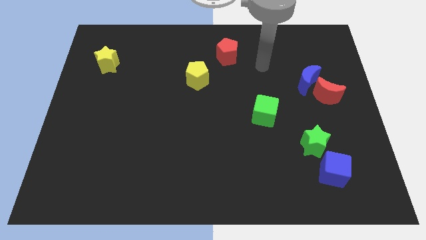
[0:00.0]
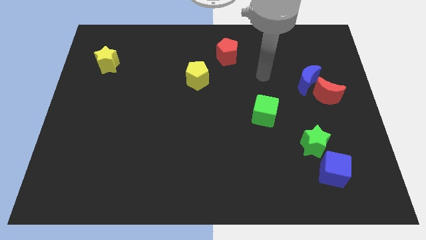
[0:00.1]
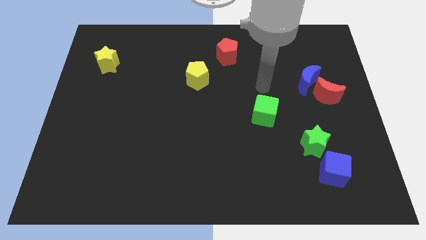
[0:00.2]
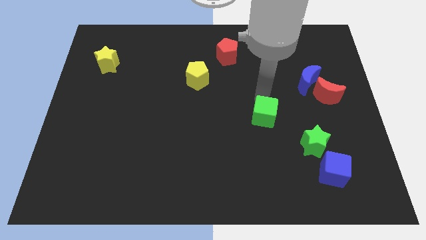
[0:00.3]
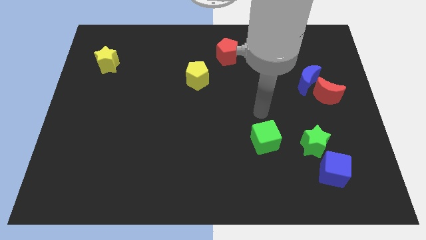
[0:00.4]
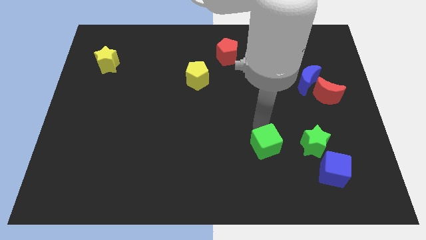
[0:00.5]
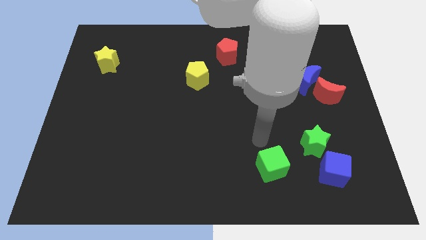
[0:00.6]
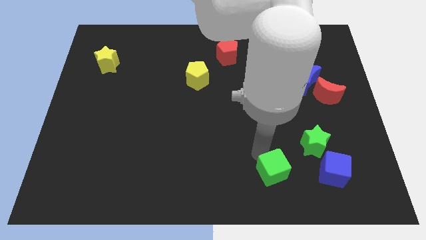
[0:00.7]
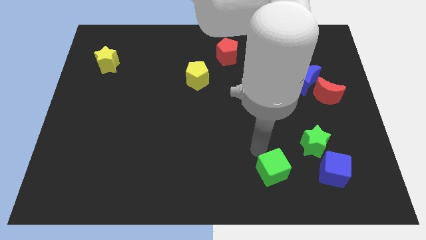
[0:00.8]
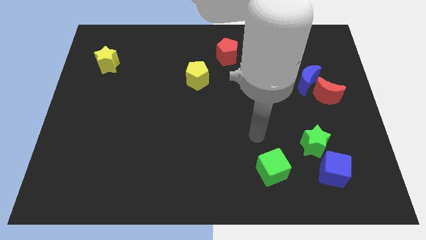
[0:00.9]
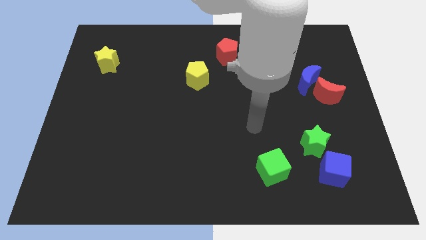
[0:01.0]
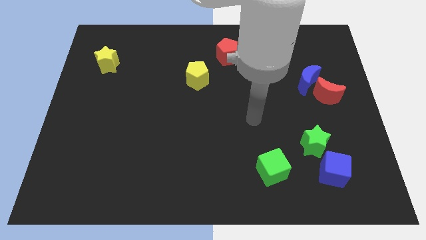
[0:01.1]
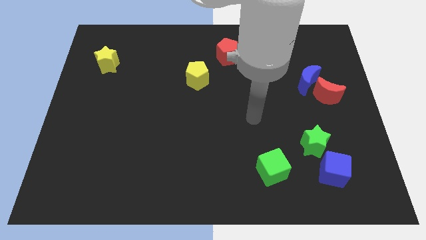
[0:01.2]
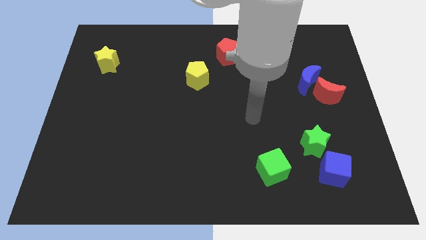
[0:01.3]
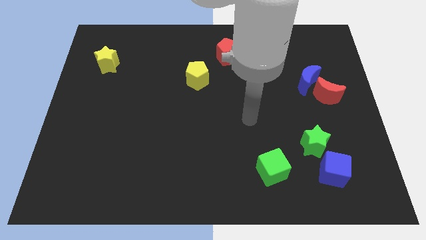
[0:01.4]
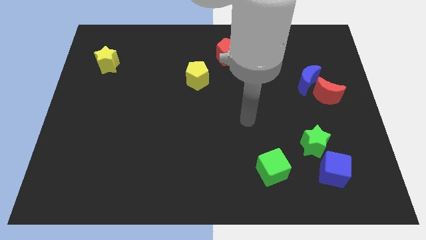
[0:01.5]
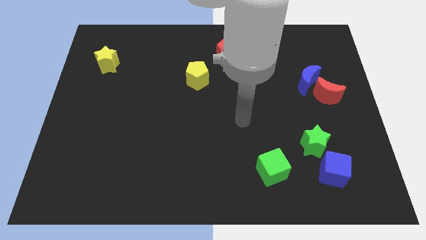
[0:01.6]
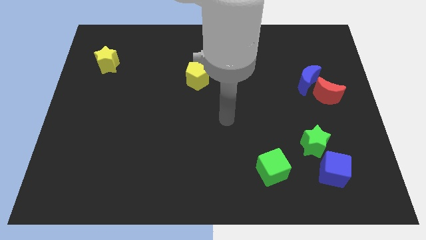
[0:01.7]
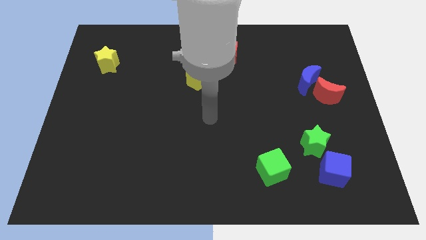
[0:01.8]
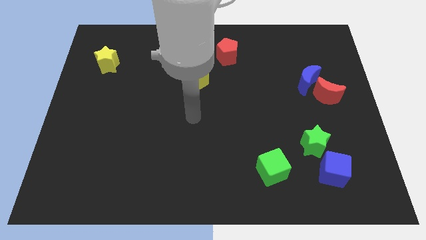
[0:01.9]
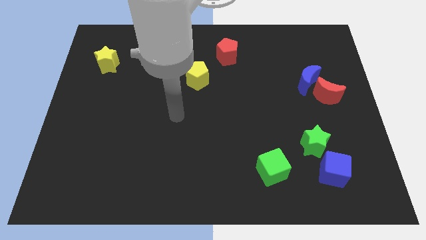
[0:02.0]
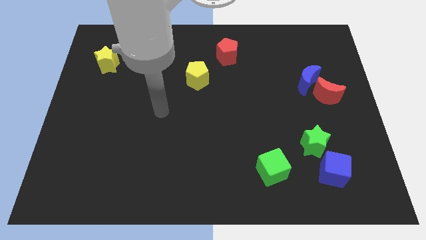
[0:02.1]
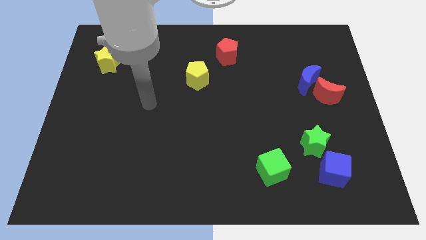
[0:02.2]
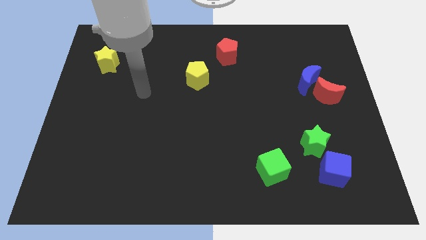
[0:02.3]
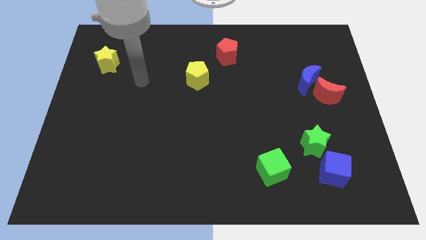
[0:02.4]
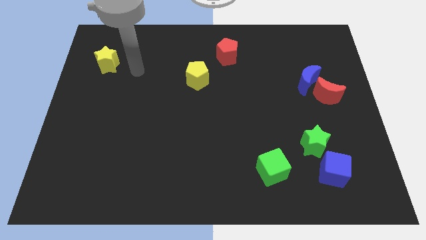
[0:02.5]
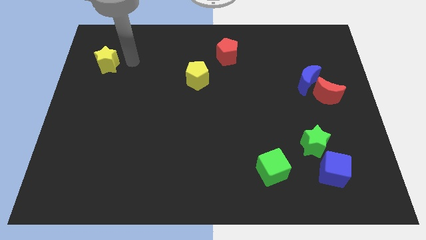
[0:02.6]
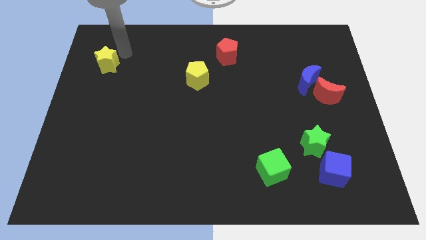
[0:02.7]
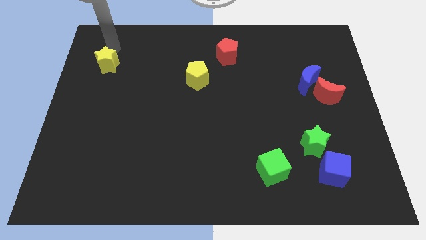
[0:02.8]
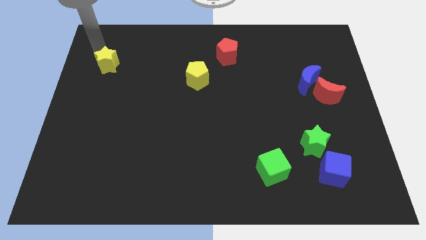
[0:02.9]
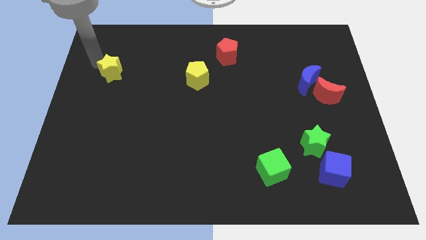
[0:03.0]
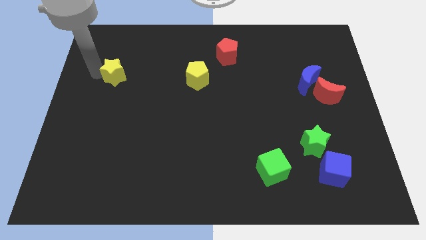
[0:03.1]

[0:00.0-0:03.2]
drag the green cube slightly downwards

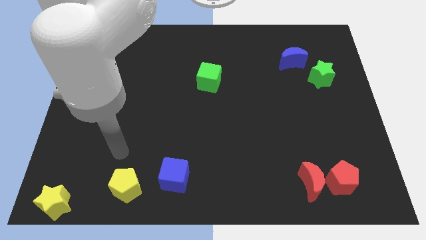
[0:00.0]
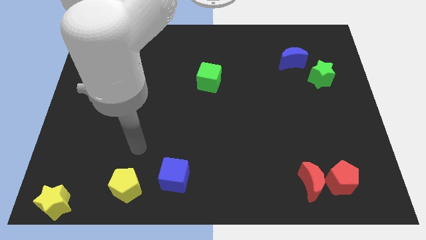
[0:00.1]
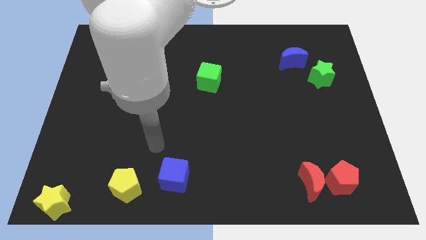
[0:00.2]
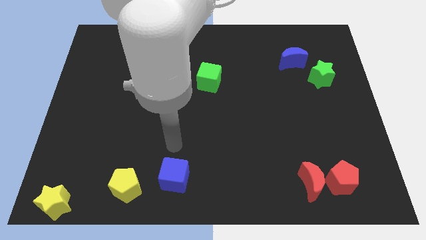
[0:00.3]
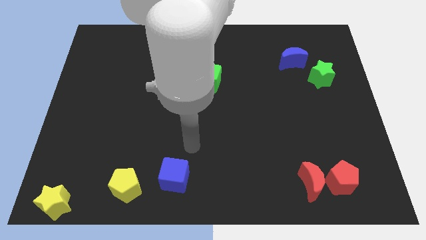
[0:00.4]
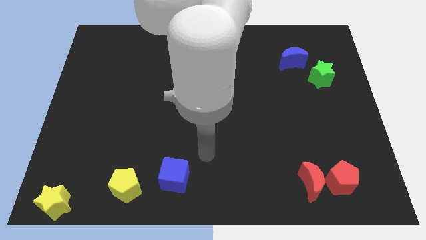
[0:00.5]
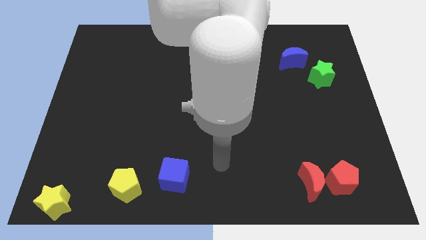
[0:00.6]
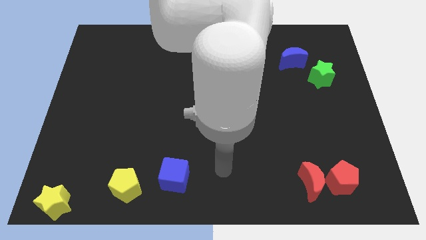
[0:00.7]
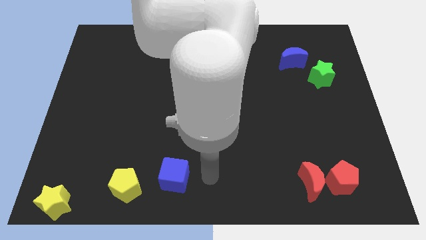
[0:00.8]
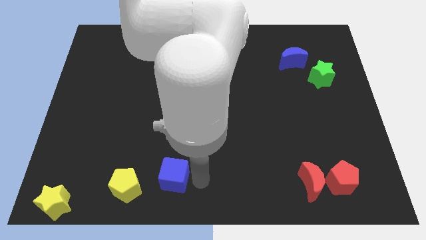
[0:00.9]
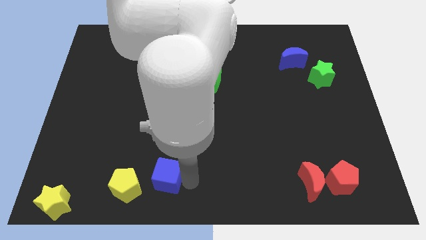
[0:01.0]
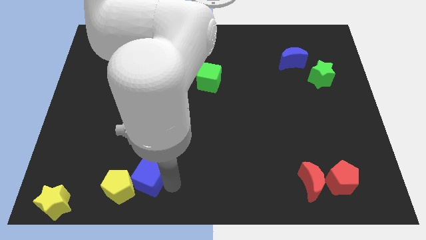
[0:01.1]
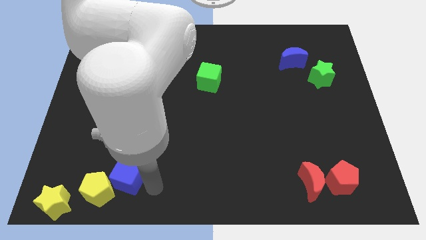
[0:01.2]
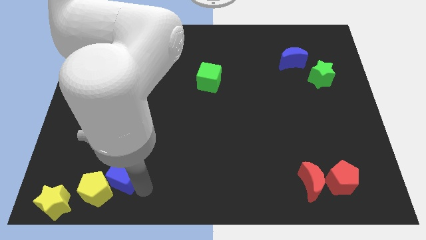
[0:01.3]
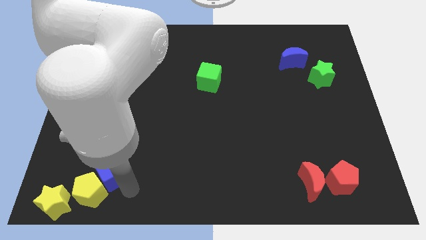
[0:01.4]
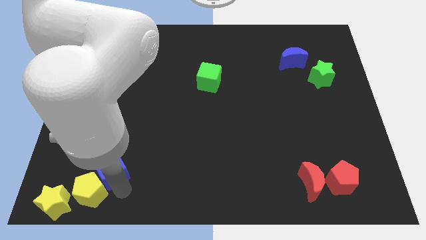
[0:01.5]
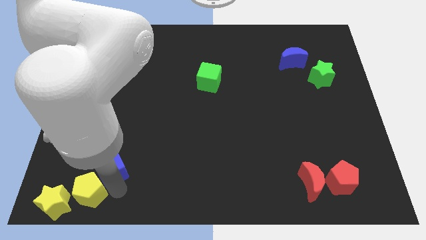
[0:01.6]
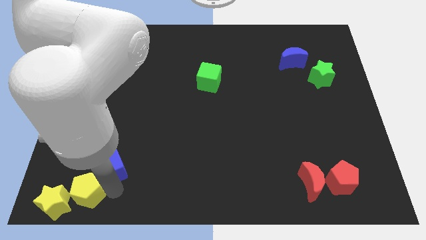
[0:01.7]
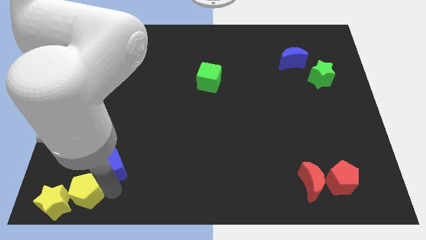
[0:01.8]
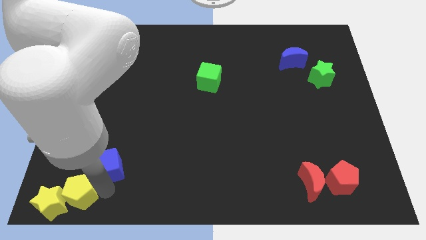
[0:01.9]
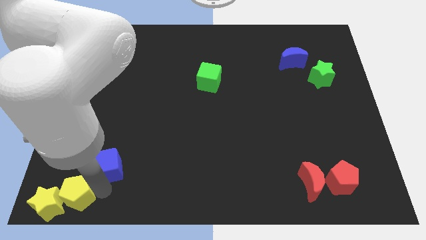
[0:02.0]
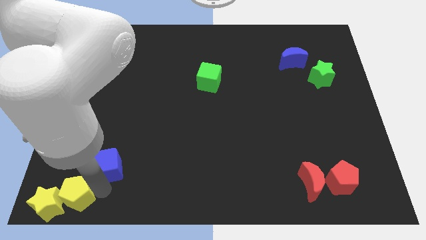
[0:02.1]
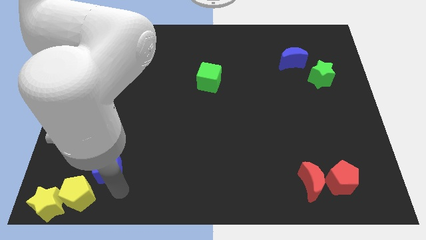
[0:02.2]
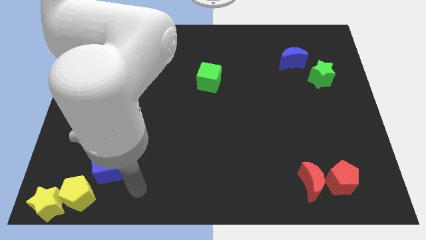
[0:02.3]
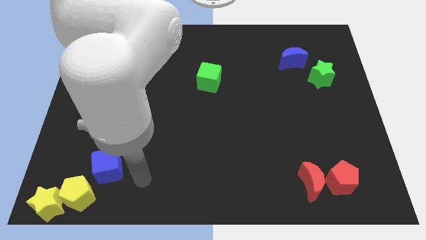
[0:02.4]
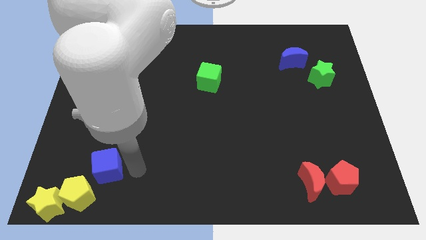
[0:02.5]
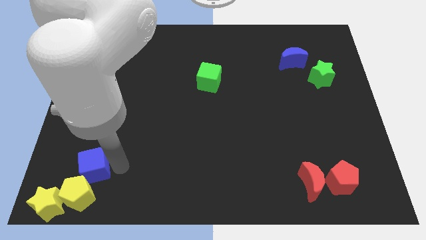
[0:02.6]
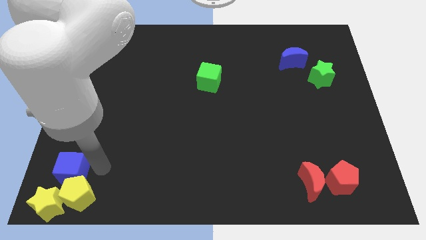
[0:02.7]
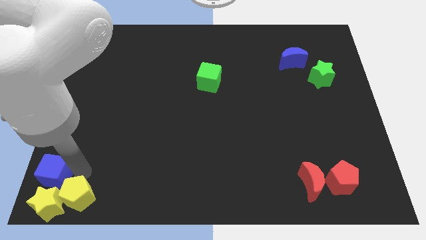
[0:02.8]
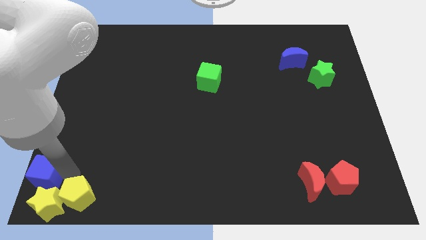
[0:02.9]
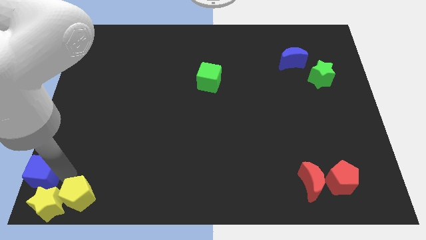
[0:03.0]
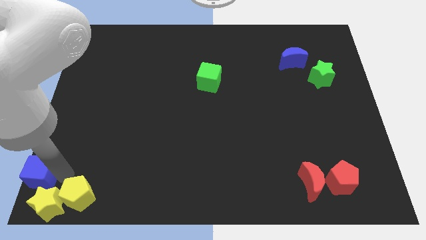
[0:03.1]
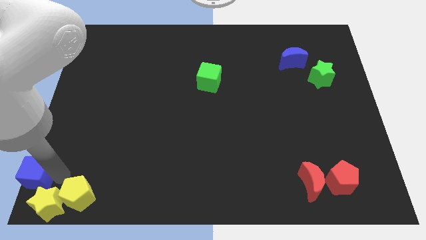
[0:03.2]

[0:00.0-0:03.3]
group up the yellow things and blue cube at the bottom left of the table

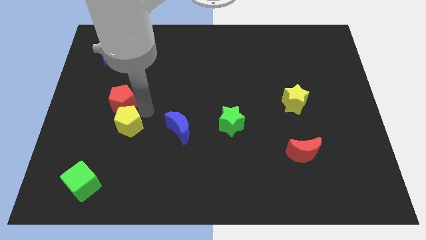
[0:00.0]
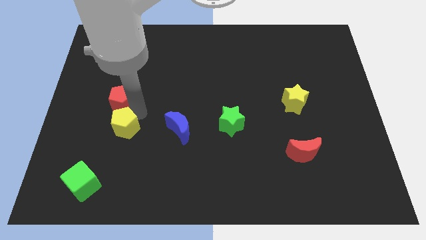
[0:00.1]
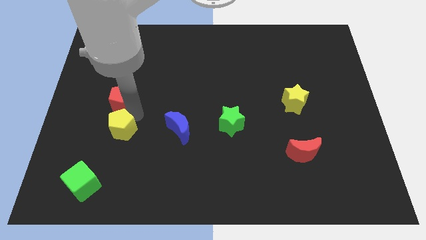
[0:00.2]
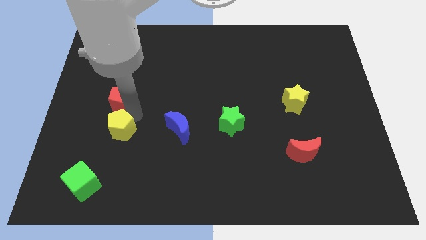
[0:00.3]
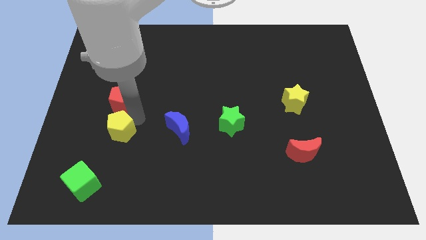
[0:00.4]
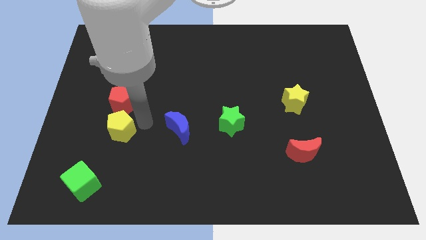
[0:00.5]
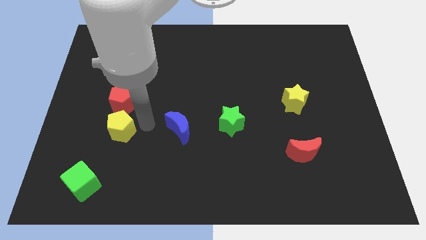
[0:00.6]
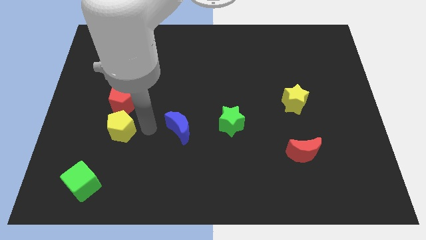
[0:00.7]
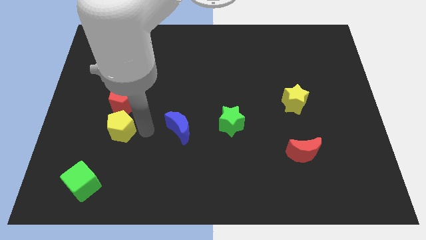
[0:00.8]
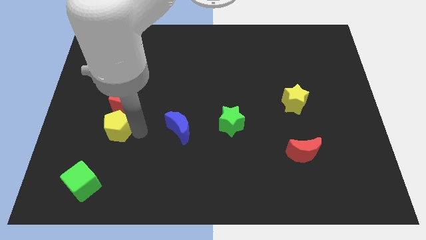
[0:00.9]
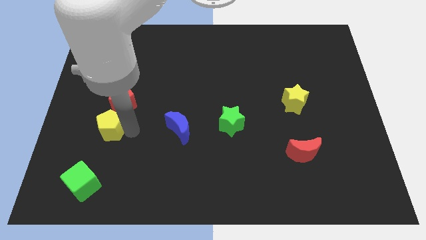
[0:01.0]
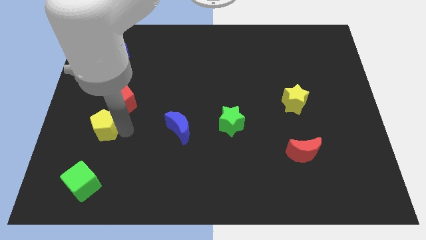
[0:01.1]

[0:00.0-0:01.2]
move the yellow pentagon vertically at the bottom of the red pentagon

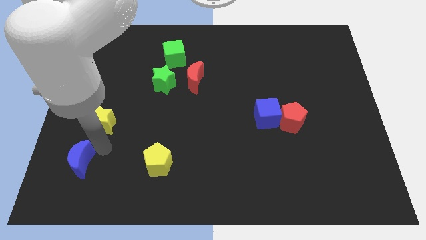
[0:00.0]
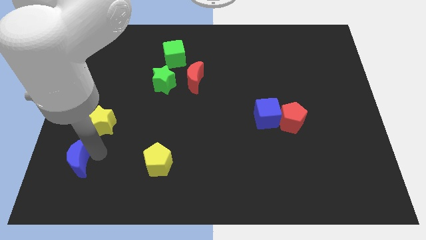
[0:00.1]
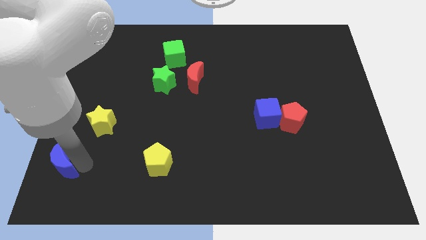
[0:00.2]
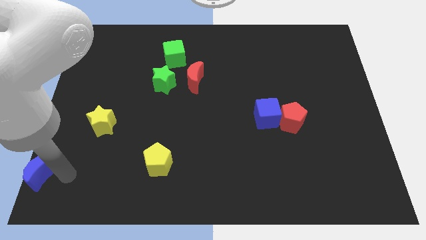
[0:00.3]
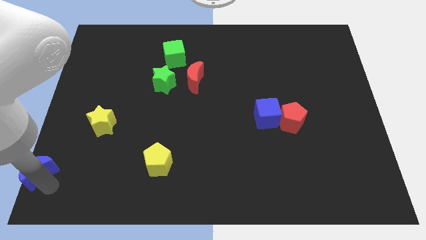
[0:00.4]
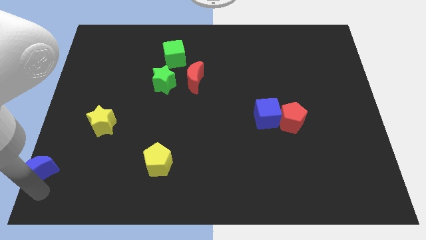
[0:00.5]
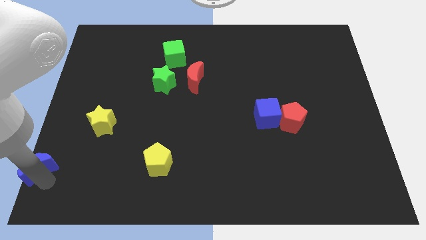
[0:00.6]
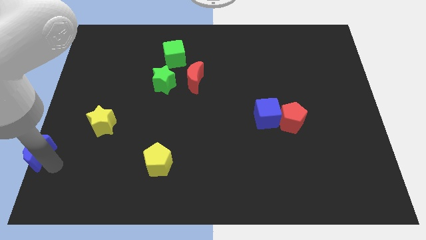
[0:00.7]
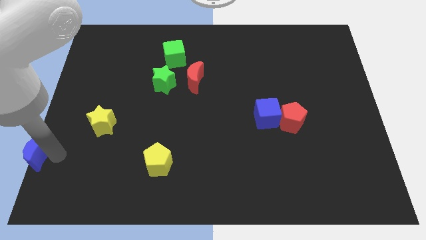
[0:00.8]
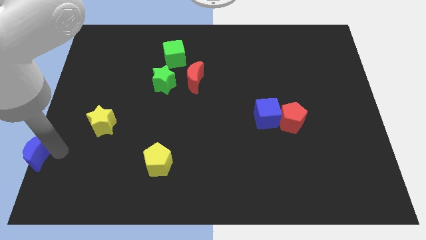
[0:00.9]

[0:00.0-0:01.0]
move the blue moon left side of the board

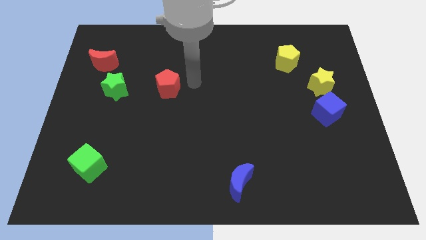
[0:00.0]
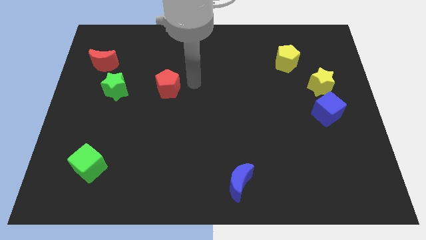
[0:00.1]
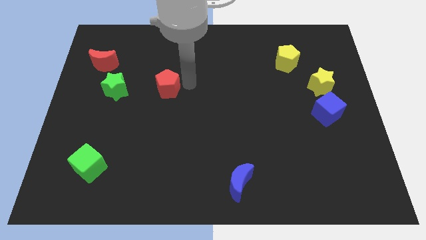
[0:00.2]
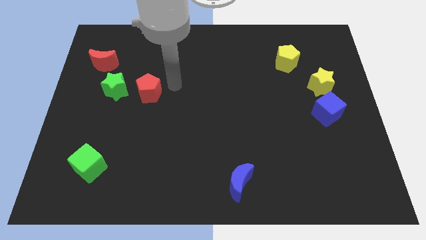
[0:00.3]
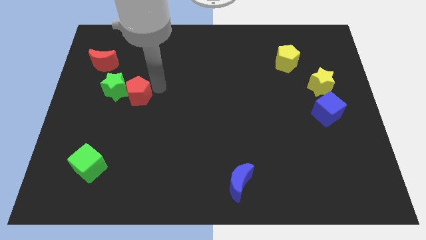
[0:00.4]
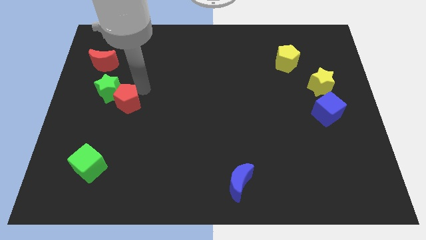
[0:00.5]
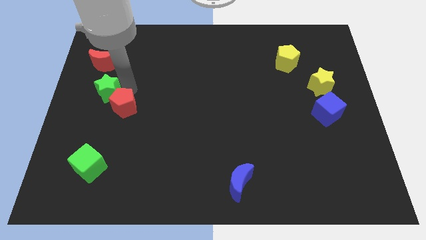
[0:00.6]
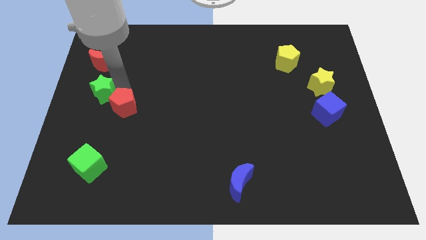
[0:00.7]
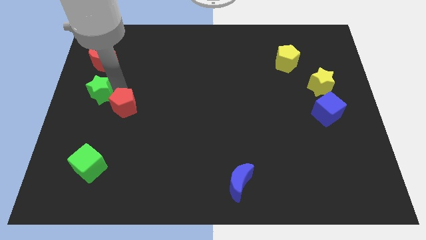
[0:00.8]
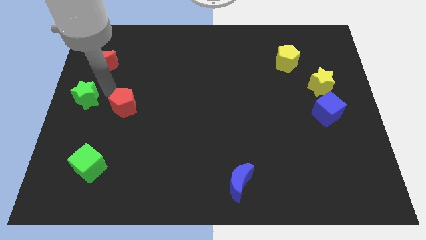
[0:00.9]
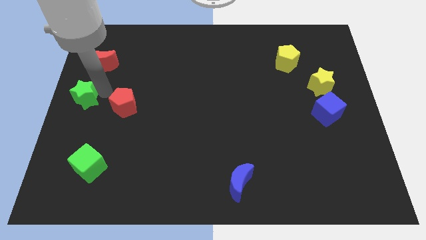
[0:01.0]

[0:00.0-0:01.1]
move the green star to the center left of the board
